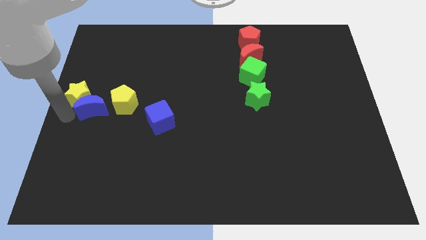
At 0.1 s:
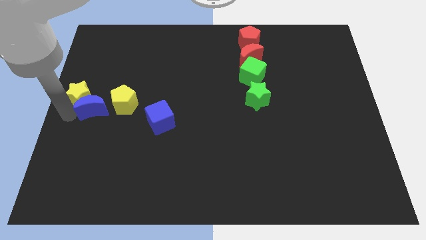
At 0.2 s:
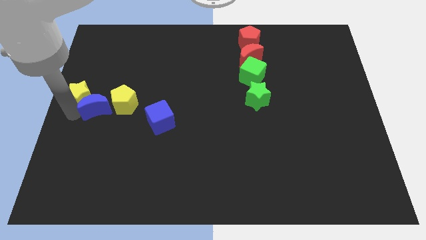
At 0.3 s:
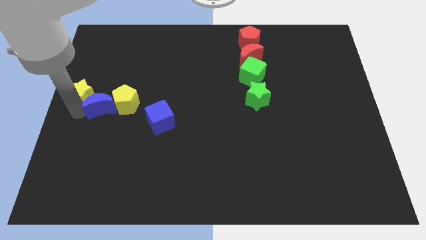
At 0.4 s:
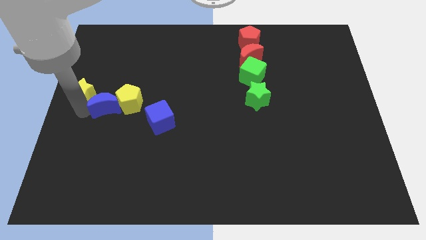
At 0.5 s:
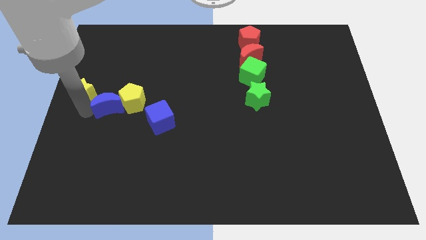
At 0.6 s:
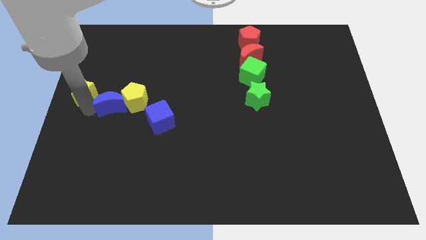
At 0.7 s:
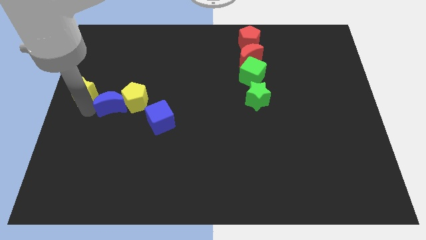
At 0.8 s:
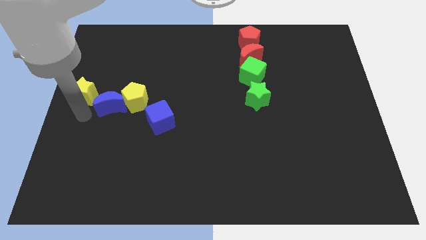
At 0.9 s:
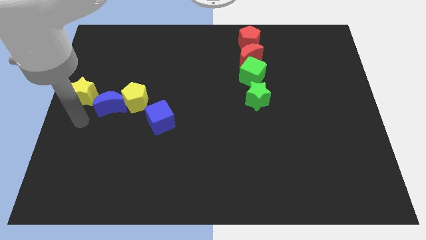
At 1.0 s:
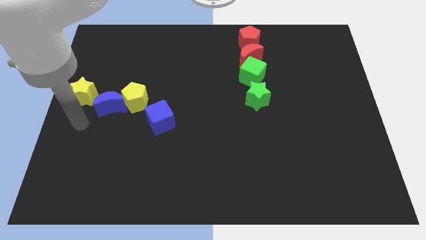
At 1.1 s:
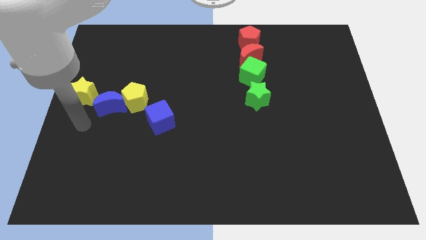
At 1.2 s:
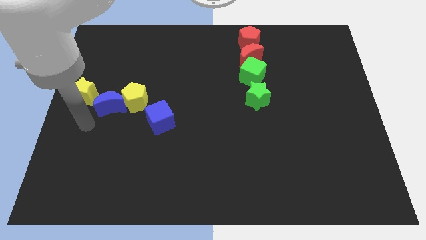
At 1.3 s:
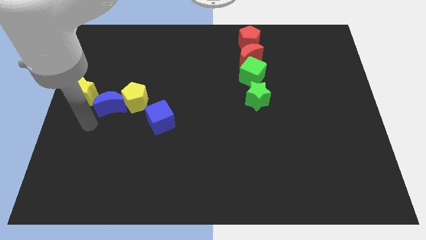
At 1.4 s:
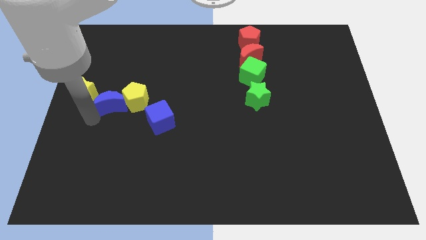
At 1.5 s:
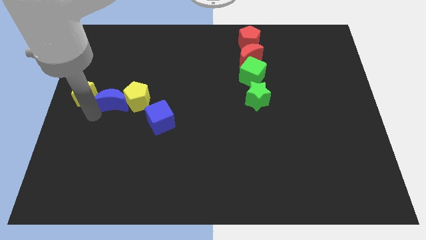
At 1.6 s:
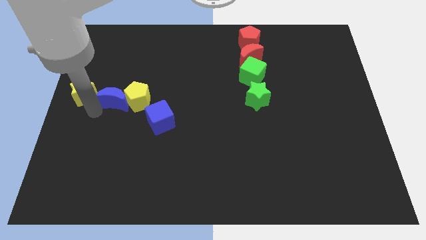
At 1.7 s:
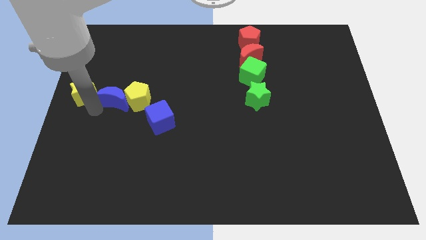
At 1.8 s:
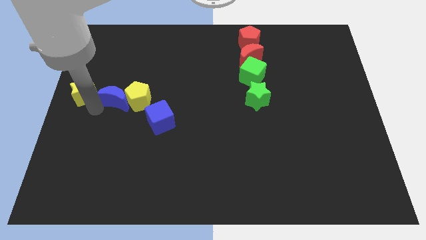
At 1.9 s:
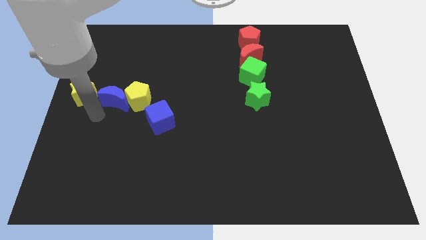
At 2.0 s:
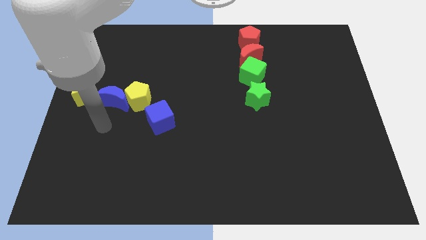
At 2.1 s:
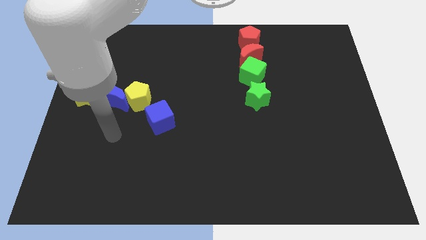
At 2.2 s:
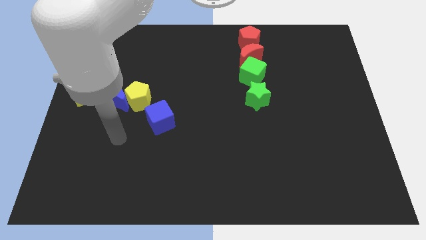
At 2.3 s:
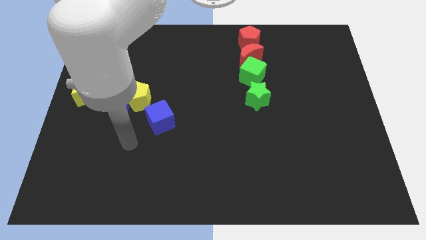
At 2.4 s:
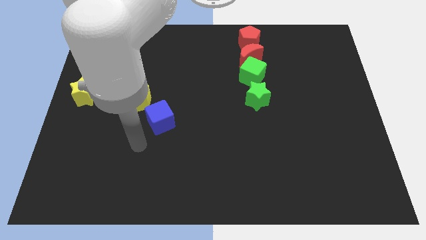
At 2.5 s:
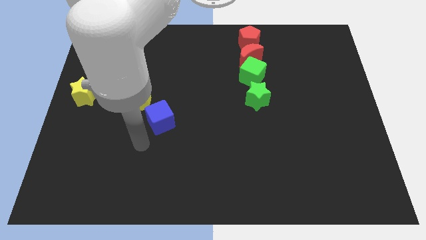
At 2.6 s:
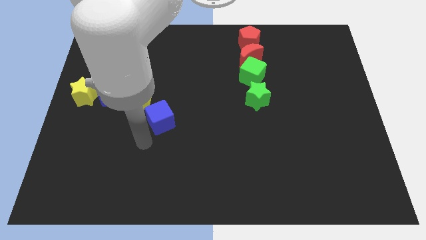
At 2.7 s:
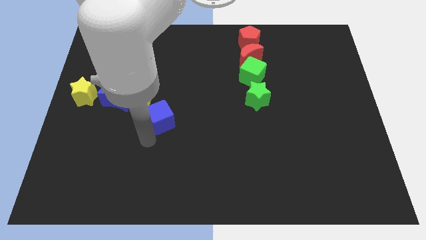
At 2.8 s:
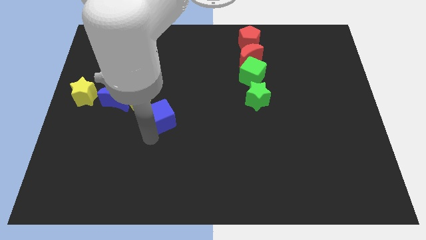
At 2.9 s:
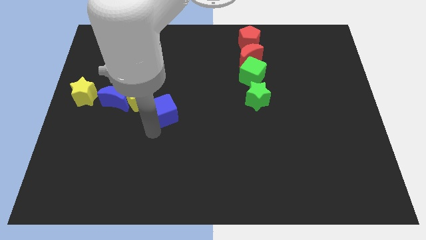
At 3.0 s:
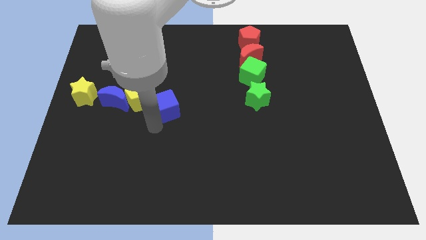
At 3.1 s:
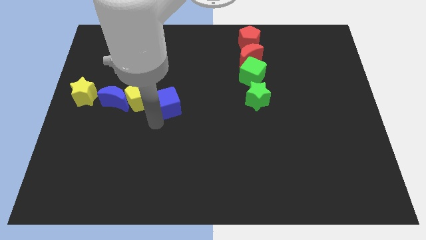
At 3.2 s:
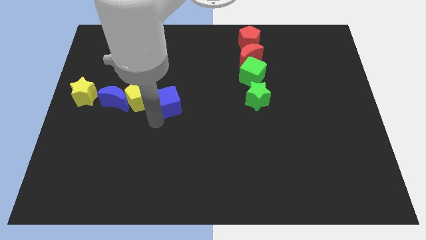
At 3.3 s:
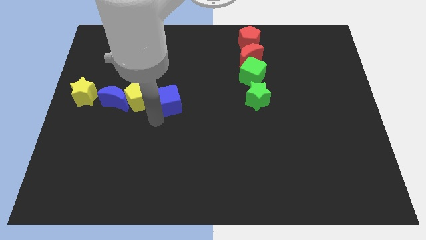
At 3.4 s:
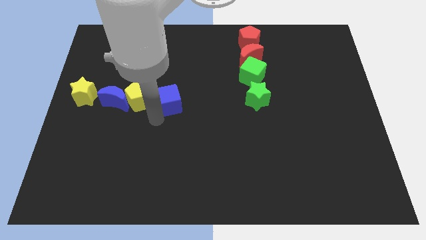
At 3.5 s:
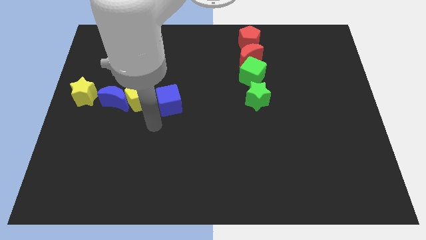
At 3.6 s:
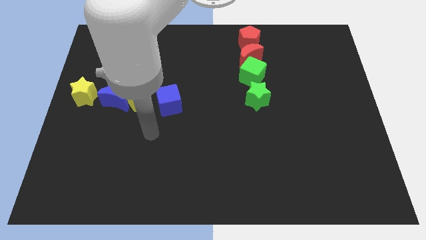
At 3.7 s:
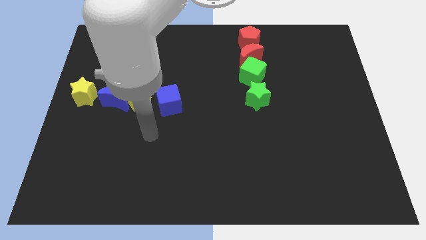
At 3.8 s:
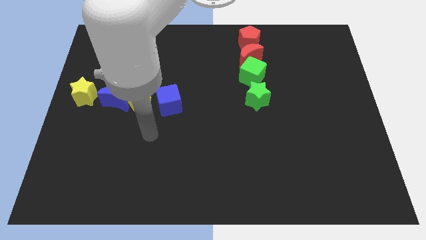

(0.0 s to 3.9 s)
make a horizontal line out of four blocks at the center left

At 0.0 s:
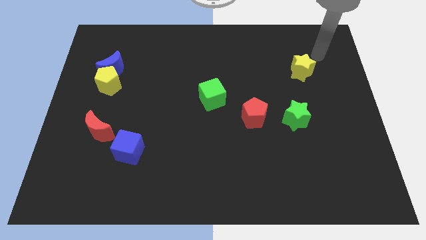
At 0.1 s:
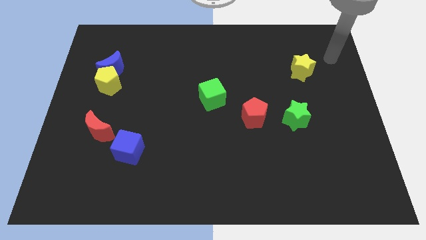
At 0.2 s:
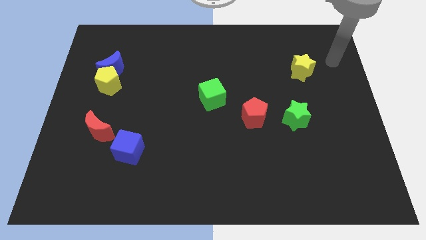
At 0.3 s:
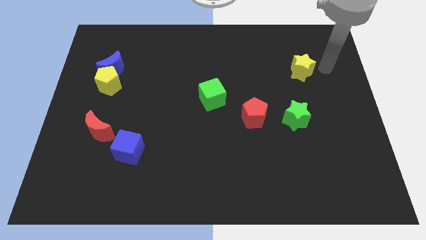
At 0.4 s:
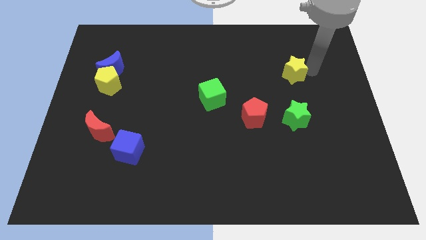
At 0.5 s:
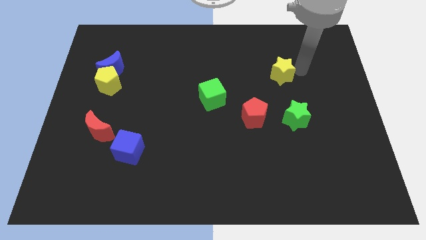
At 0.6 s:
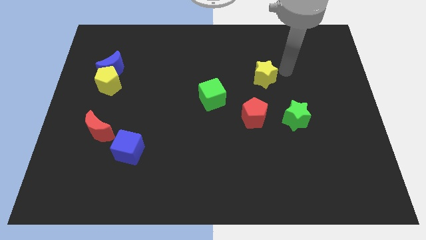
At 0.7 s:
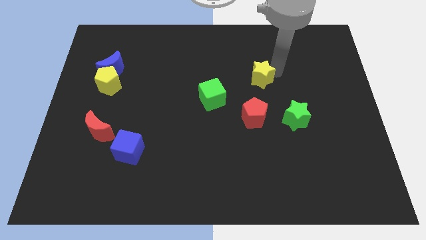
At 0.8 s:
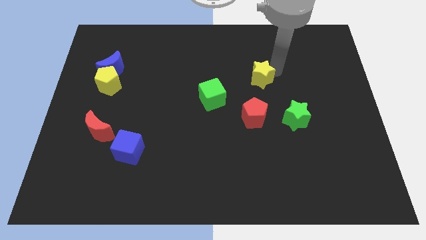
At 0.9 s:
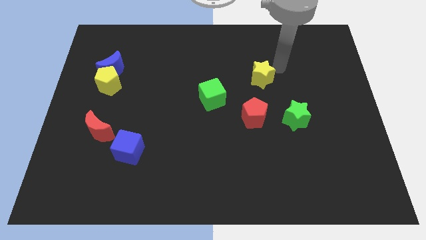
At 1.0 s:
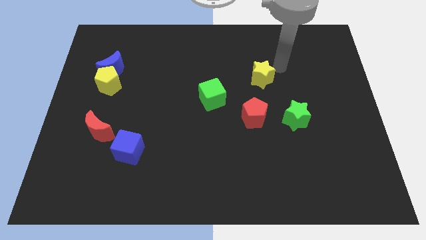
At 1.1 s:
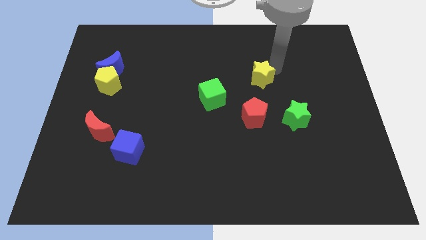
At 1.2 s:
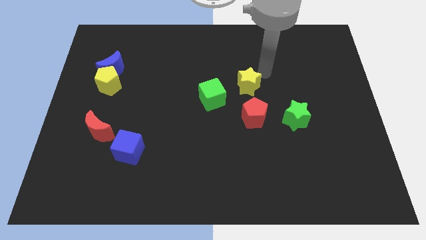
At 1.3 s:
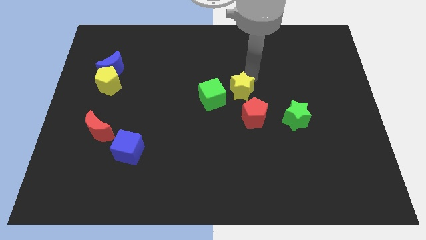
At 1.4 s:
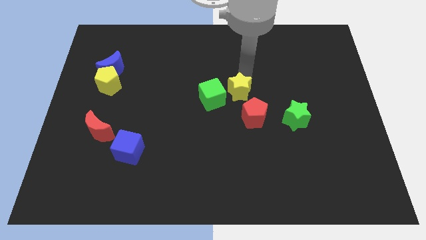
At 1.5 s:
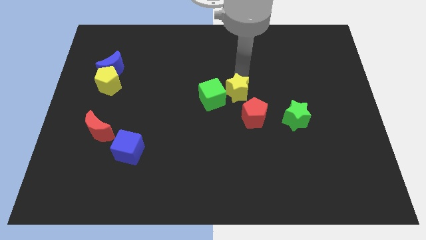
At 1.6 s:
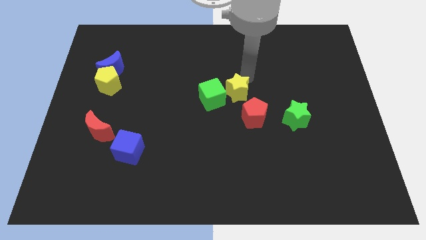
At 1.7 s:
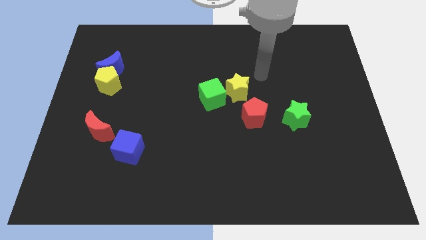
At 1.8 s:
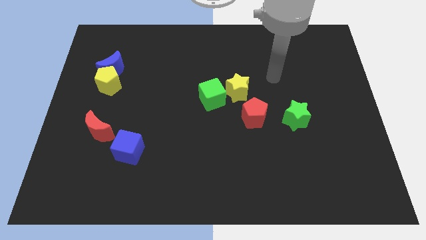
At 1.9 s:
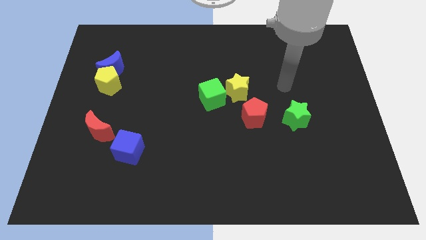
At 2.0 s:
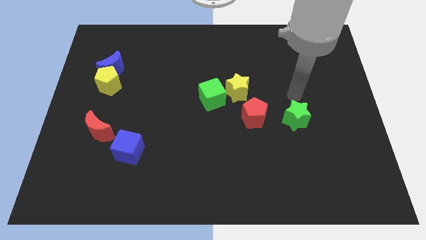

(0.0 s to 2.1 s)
place the yellow star diagonal right of green cube

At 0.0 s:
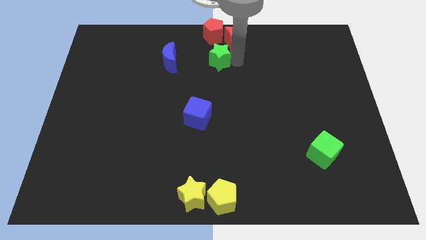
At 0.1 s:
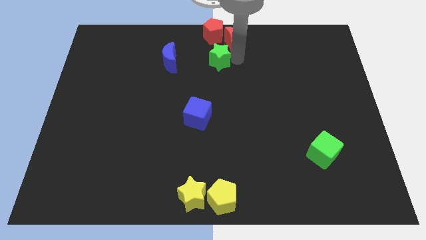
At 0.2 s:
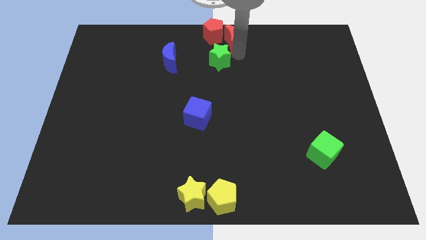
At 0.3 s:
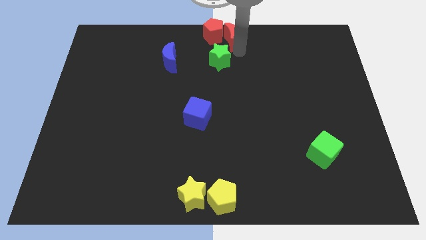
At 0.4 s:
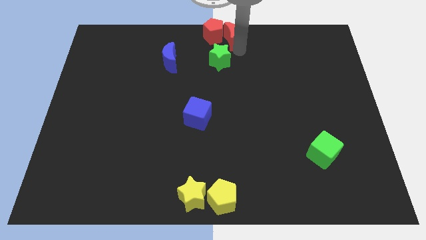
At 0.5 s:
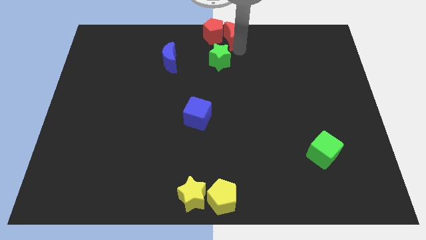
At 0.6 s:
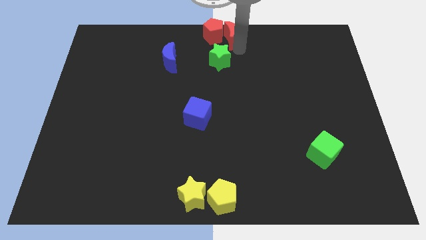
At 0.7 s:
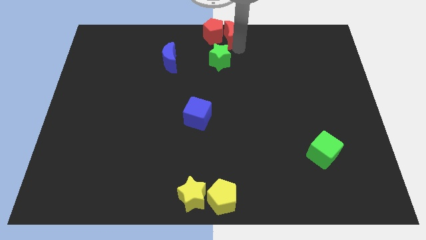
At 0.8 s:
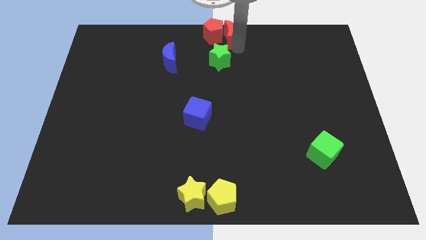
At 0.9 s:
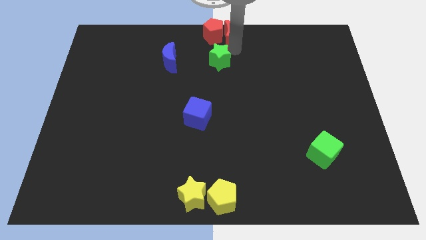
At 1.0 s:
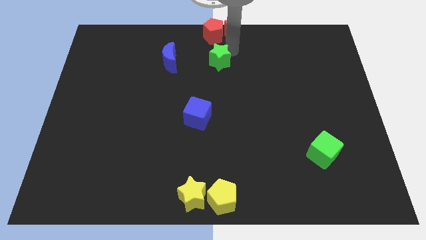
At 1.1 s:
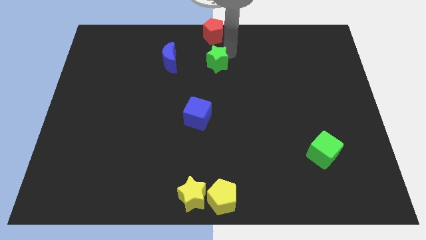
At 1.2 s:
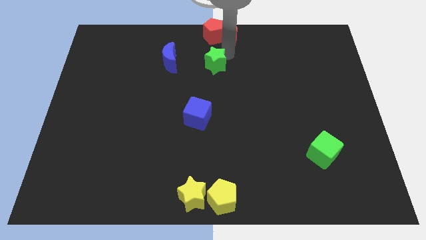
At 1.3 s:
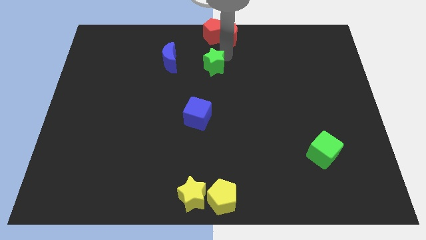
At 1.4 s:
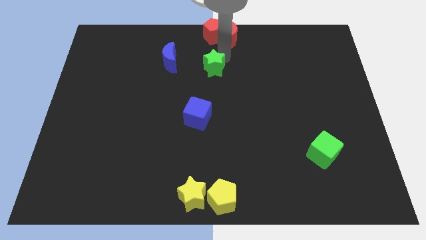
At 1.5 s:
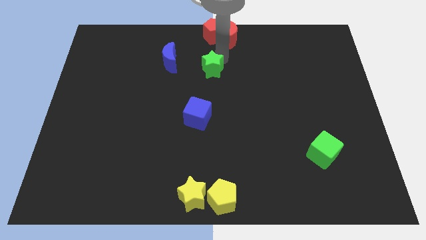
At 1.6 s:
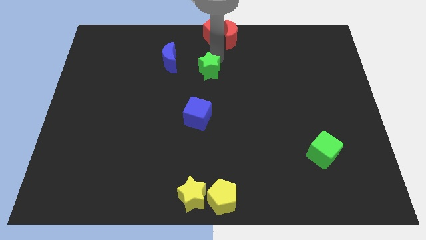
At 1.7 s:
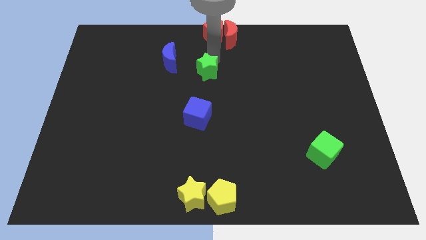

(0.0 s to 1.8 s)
move the green star towards the bottom

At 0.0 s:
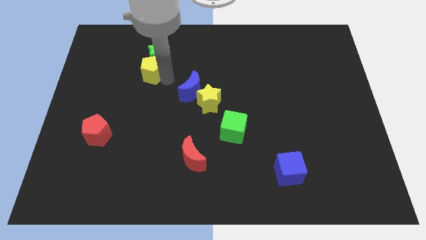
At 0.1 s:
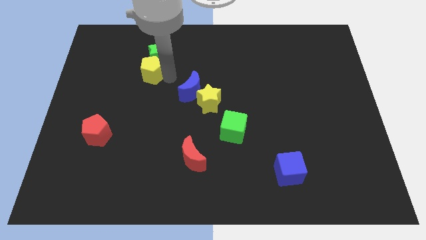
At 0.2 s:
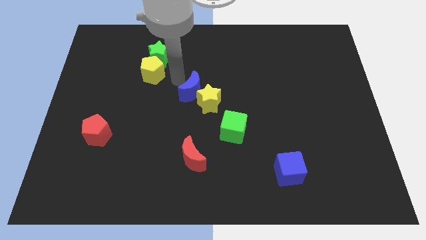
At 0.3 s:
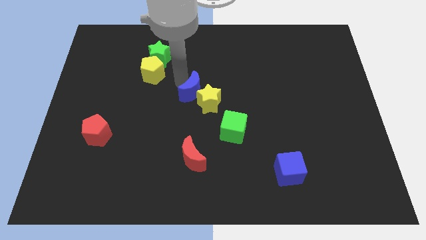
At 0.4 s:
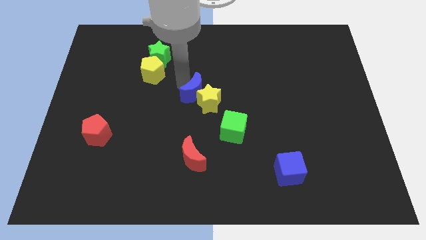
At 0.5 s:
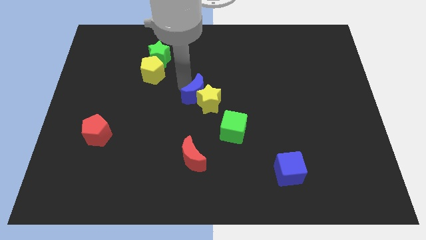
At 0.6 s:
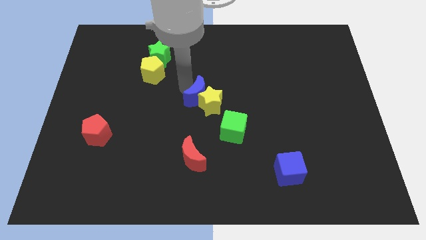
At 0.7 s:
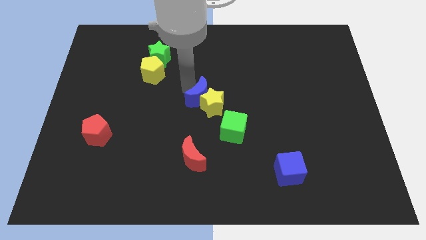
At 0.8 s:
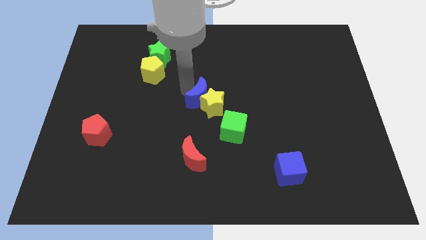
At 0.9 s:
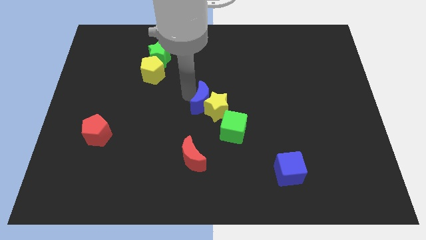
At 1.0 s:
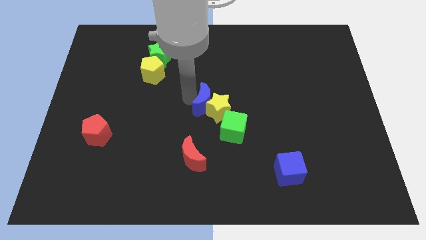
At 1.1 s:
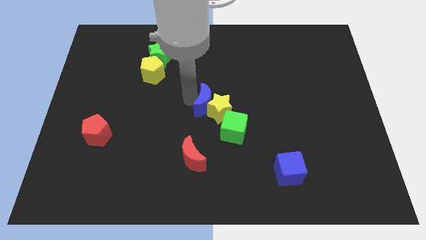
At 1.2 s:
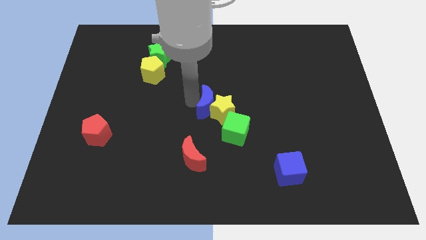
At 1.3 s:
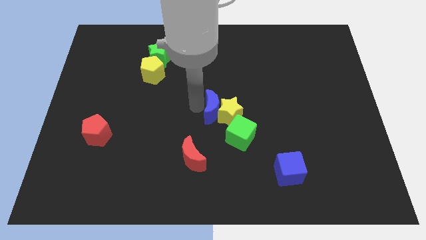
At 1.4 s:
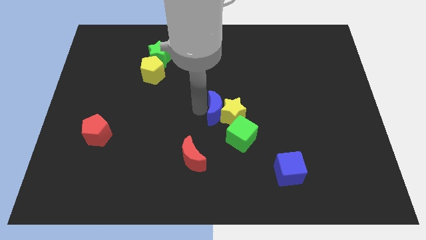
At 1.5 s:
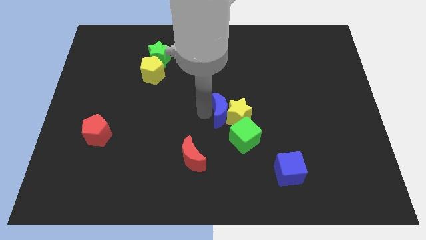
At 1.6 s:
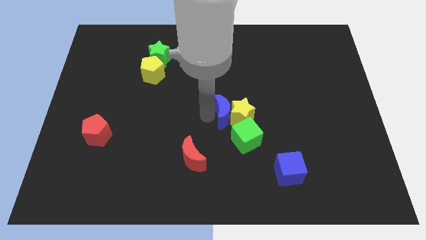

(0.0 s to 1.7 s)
push the blue crescent and yellow star into the green cube
